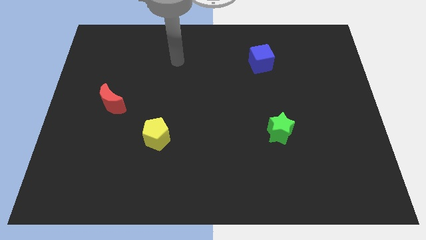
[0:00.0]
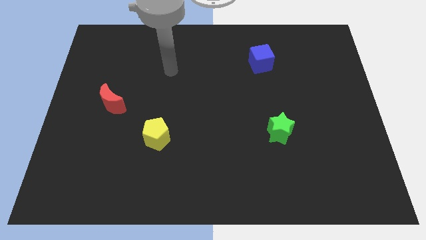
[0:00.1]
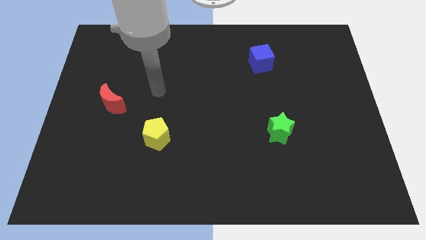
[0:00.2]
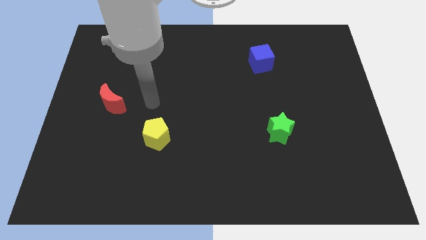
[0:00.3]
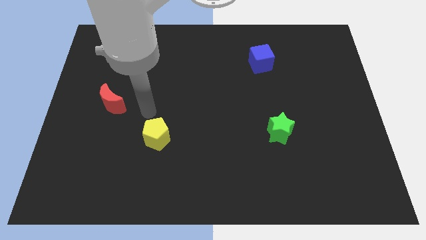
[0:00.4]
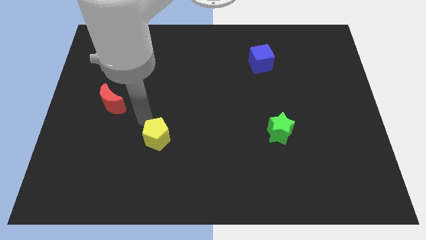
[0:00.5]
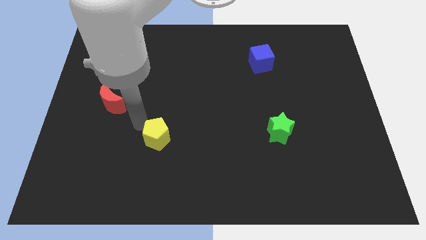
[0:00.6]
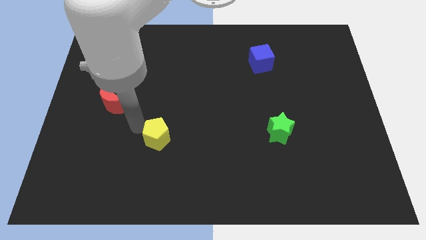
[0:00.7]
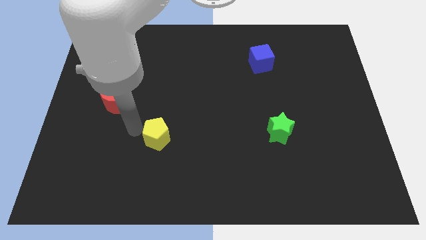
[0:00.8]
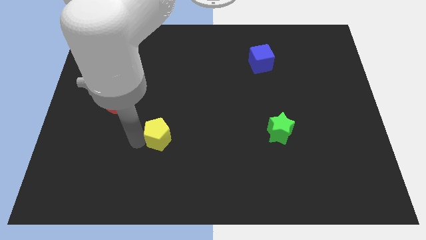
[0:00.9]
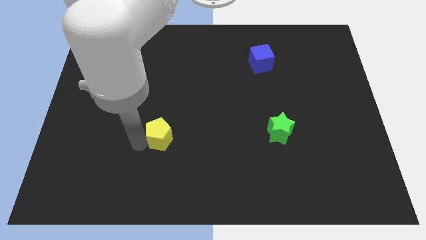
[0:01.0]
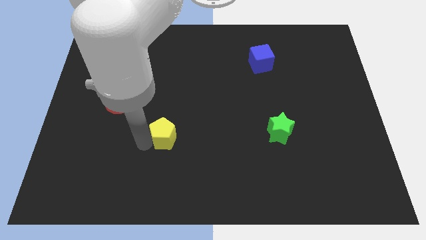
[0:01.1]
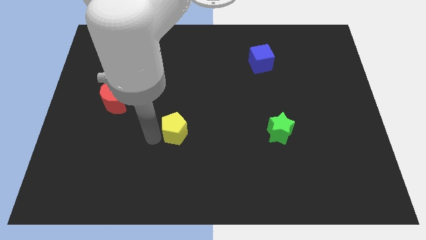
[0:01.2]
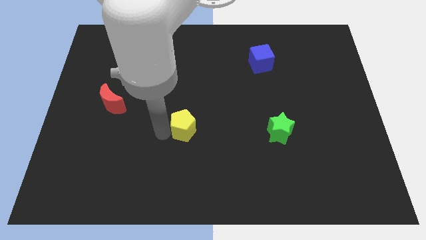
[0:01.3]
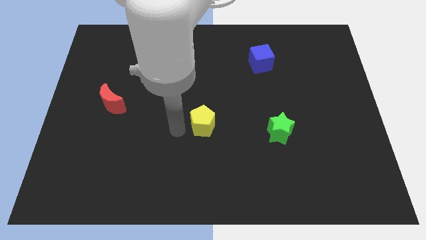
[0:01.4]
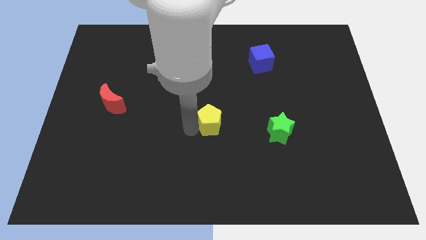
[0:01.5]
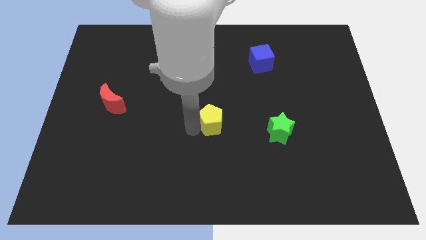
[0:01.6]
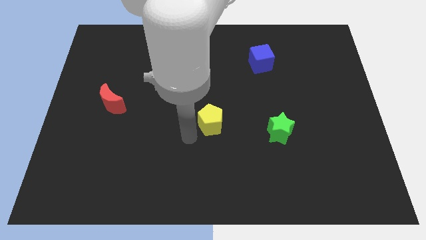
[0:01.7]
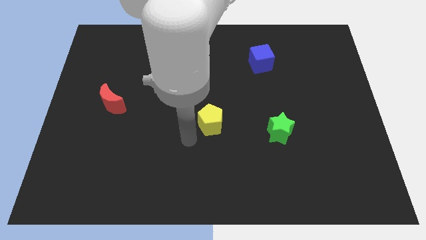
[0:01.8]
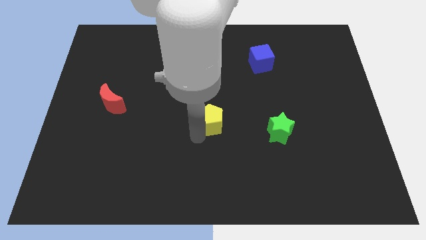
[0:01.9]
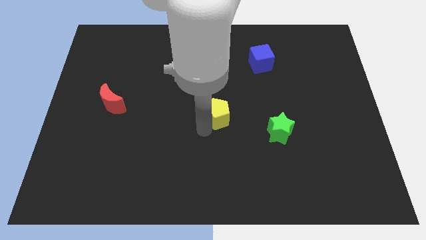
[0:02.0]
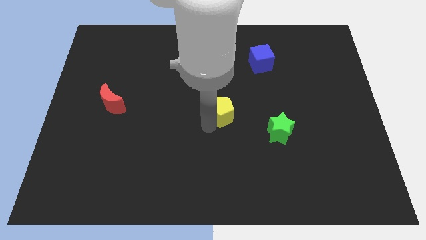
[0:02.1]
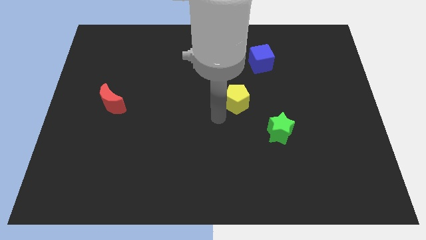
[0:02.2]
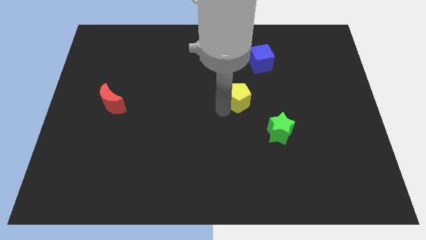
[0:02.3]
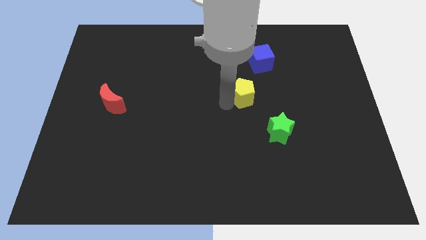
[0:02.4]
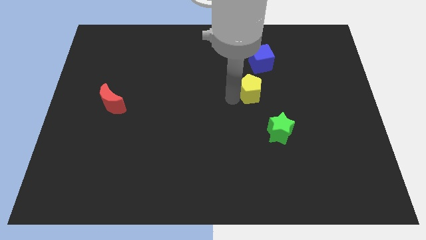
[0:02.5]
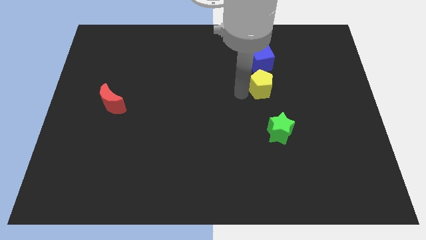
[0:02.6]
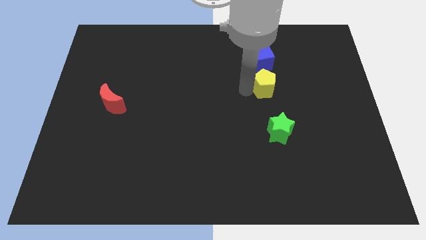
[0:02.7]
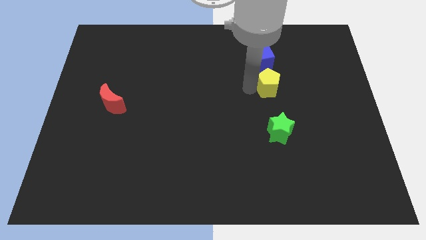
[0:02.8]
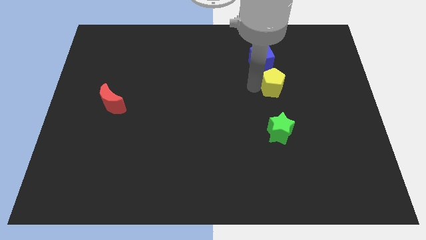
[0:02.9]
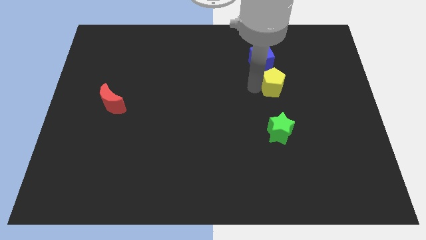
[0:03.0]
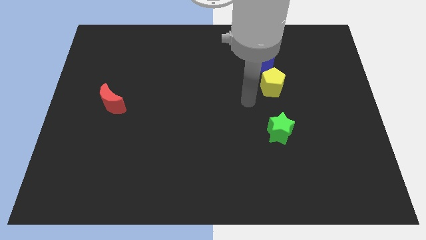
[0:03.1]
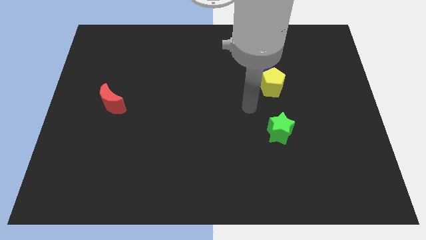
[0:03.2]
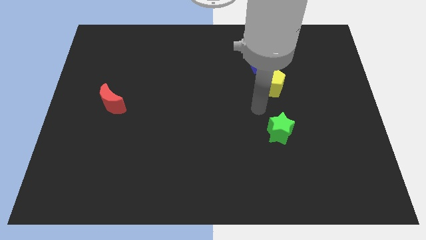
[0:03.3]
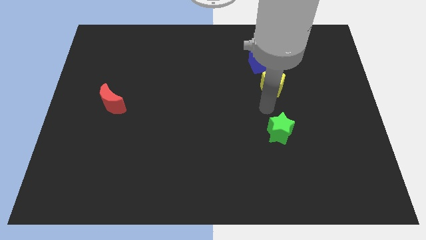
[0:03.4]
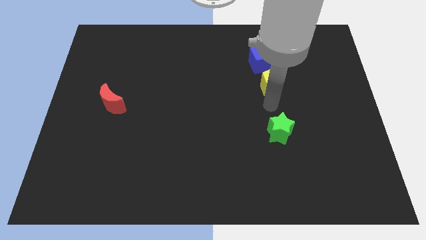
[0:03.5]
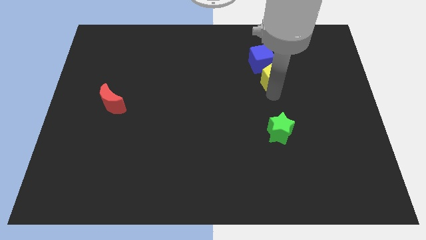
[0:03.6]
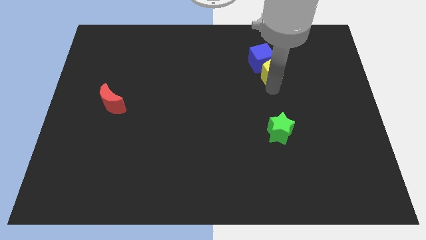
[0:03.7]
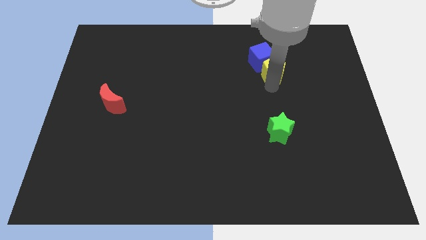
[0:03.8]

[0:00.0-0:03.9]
slide the yellow pentagon next to the blue block

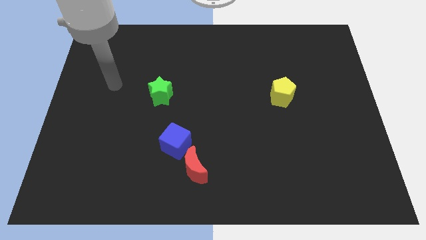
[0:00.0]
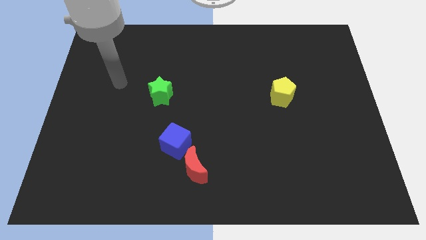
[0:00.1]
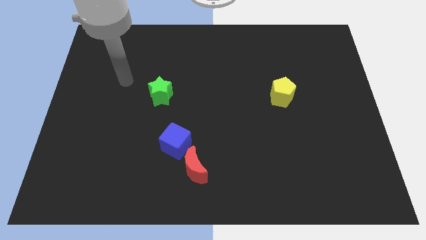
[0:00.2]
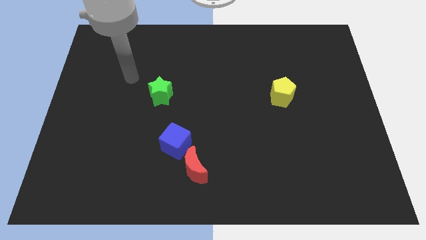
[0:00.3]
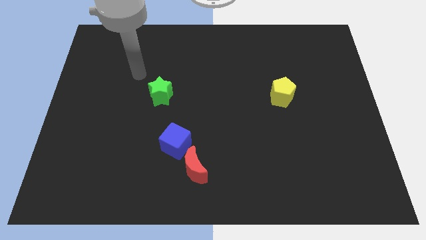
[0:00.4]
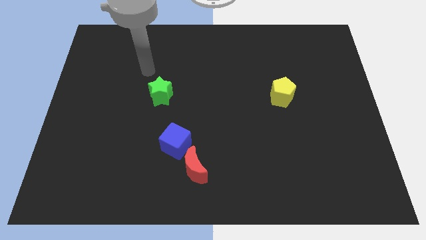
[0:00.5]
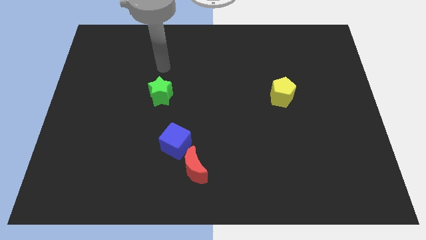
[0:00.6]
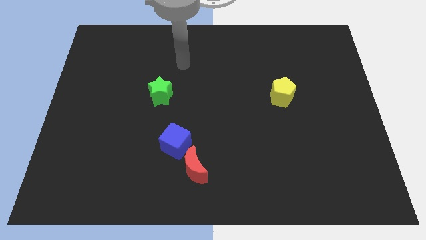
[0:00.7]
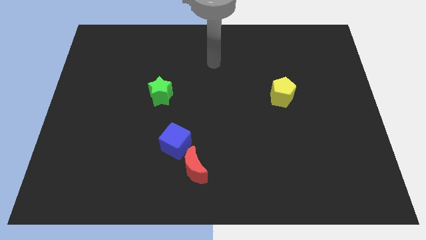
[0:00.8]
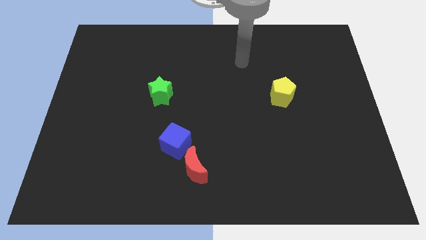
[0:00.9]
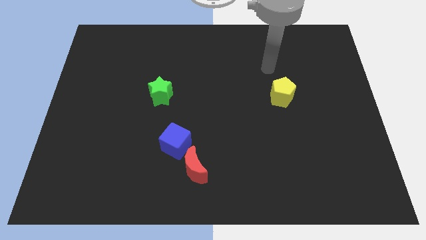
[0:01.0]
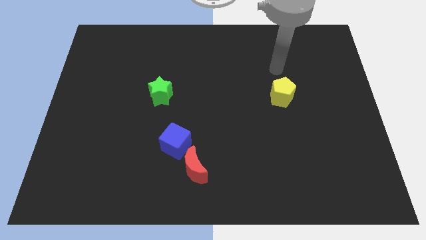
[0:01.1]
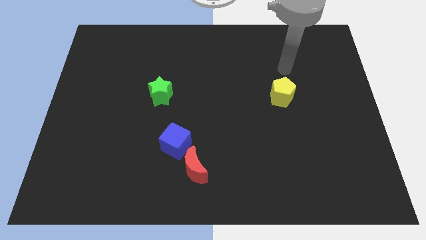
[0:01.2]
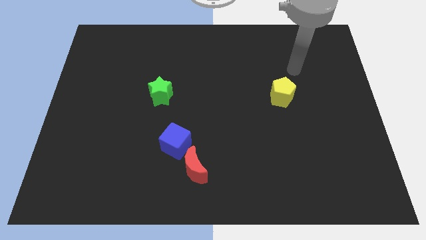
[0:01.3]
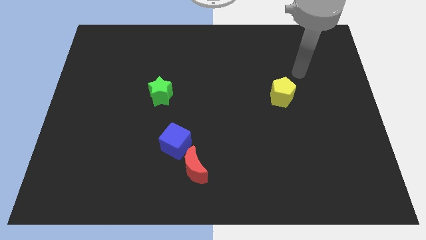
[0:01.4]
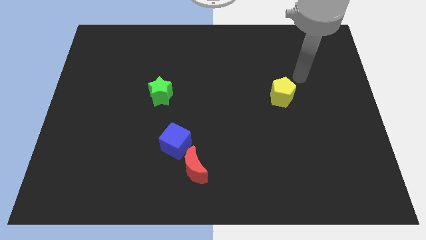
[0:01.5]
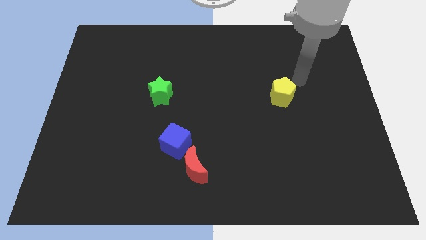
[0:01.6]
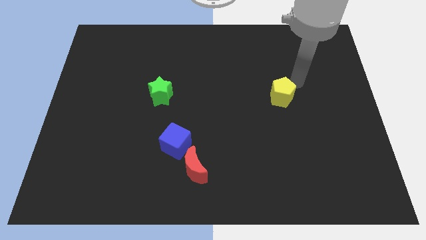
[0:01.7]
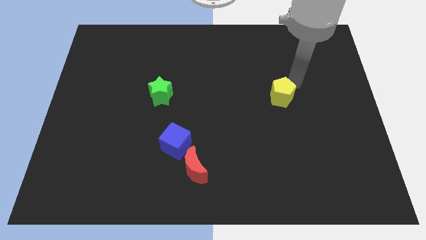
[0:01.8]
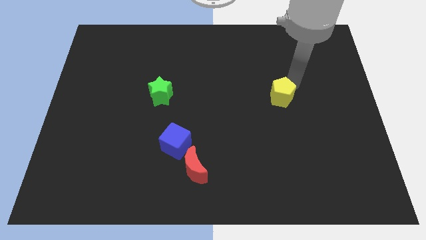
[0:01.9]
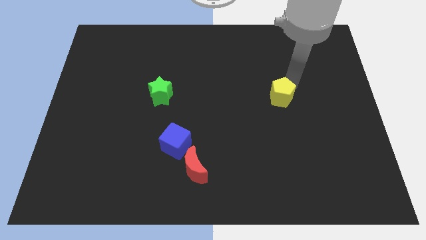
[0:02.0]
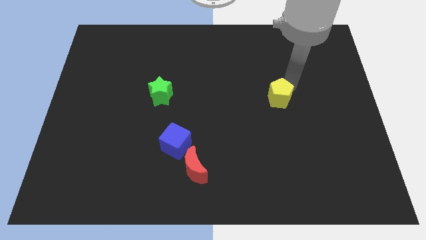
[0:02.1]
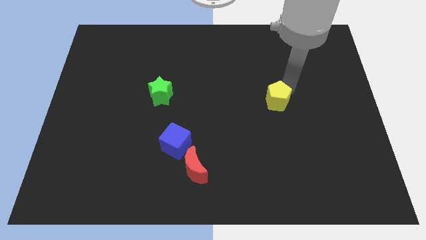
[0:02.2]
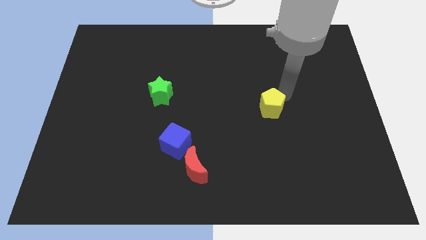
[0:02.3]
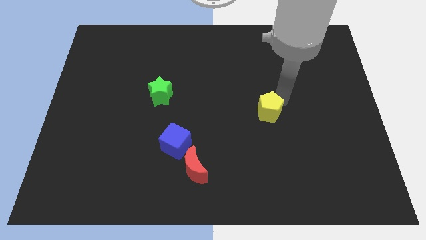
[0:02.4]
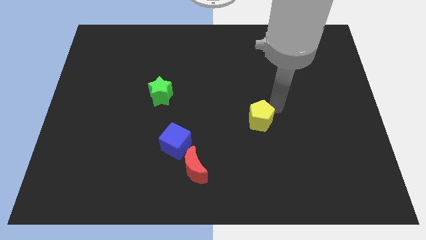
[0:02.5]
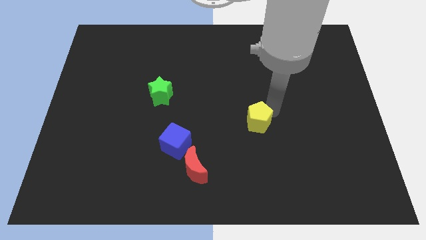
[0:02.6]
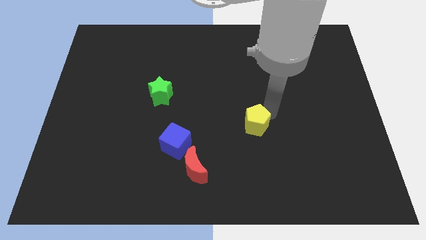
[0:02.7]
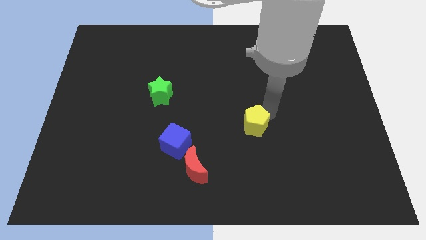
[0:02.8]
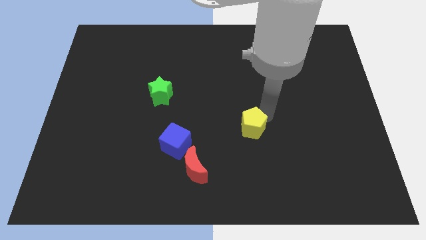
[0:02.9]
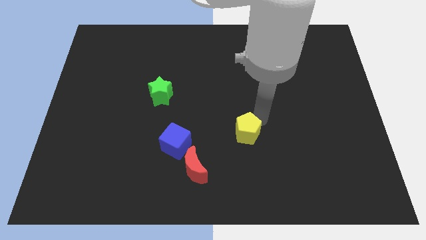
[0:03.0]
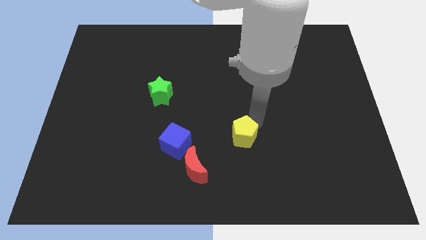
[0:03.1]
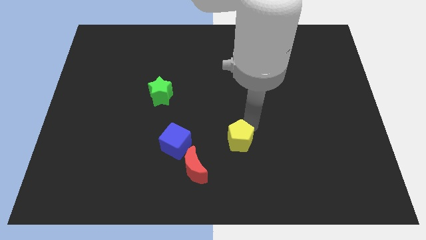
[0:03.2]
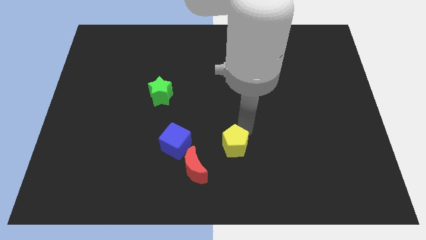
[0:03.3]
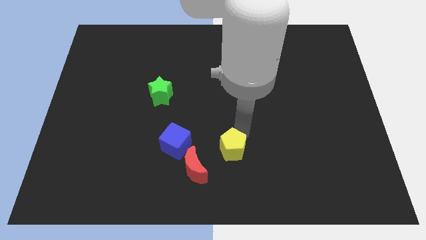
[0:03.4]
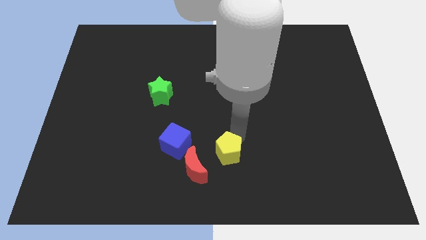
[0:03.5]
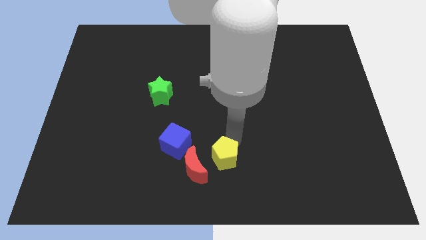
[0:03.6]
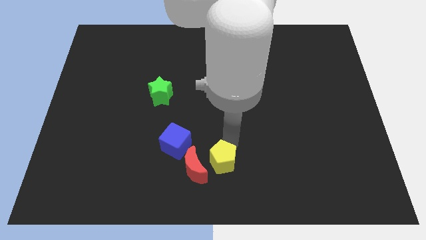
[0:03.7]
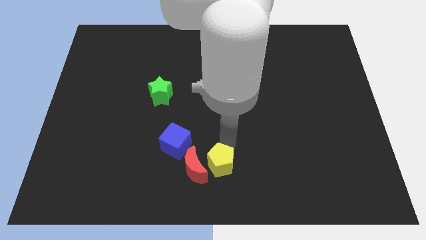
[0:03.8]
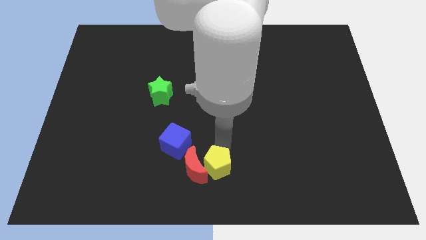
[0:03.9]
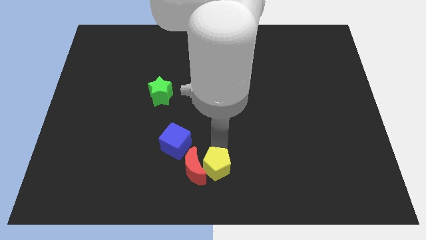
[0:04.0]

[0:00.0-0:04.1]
slide the yellow block next to the moon

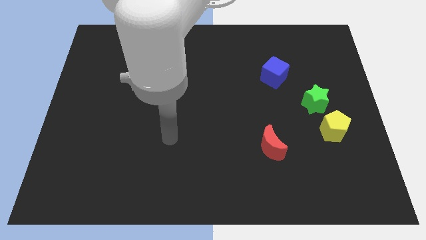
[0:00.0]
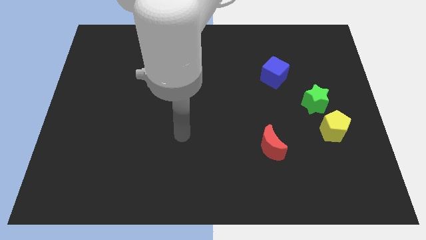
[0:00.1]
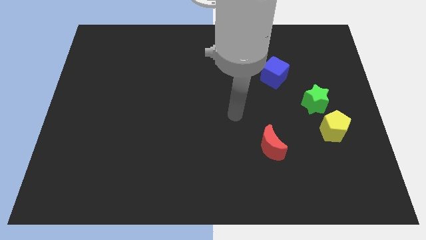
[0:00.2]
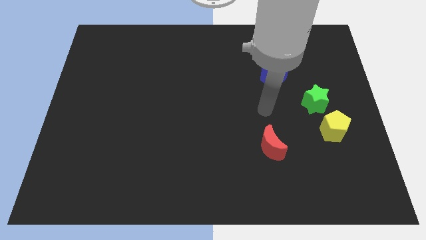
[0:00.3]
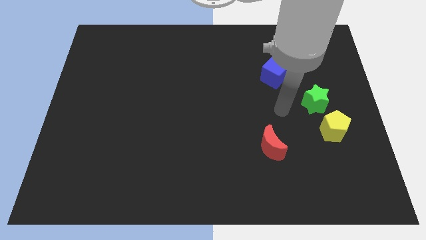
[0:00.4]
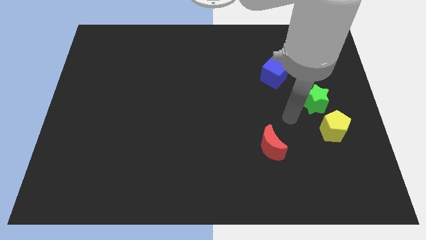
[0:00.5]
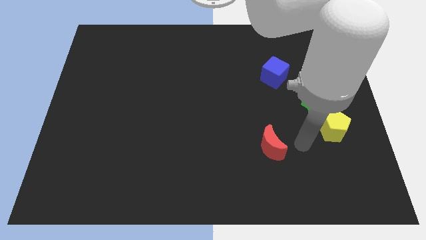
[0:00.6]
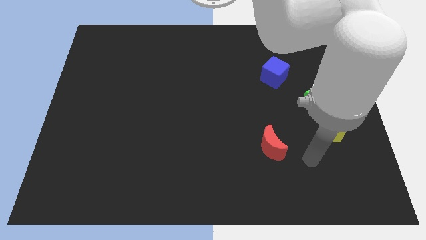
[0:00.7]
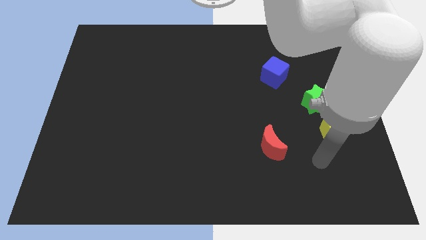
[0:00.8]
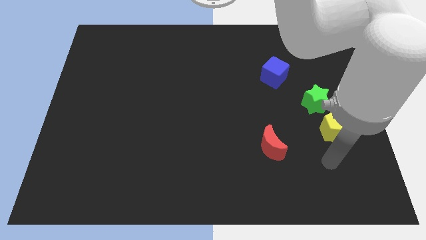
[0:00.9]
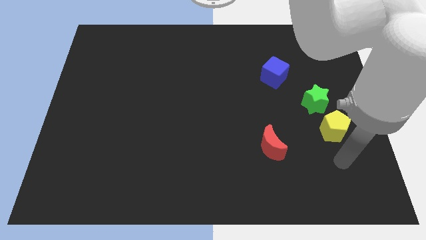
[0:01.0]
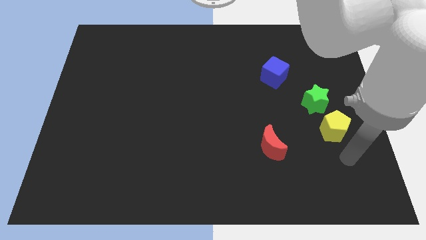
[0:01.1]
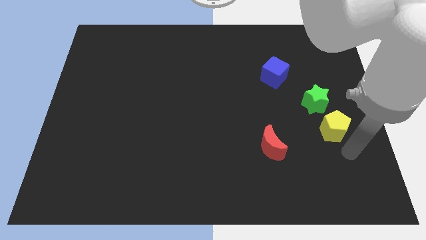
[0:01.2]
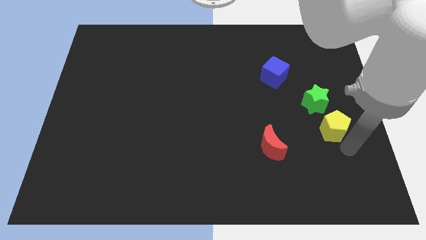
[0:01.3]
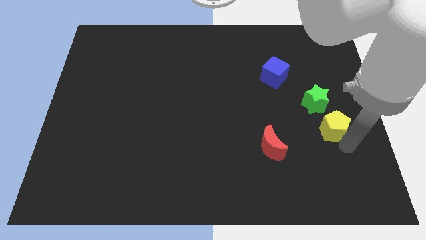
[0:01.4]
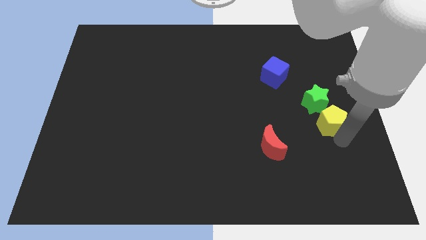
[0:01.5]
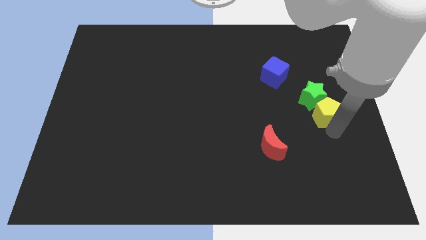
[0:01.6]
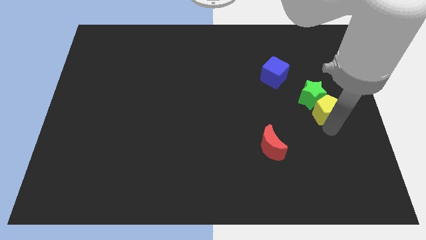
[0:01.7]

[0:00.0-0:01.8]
put the pentagon next to the green star
